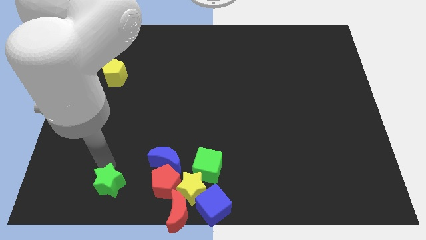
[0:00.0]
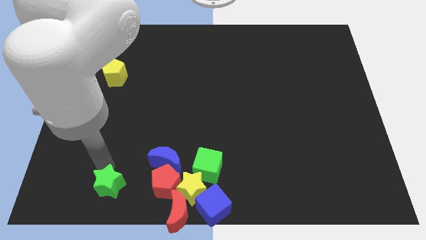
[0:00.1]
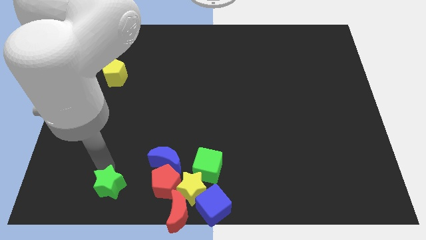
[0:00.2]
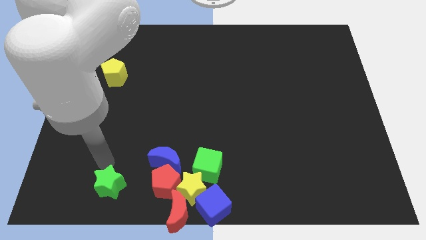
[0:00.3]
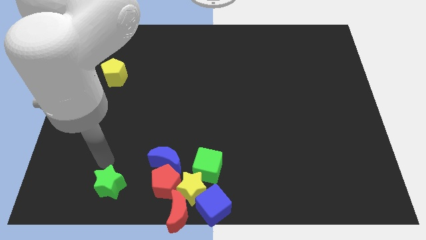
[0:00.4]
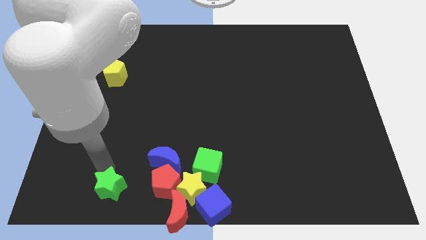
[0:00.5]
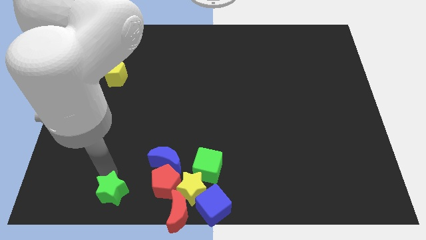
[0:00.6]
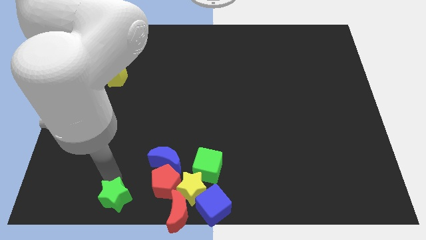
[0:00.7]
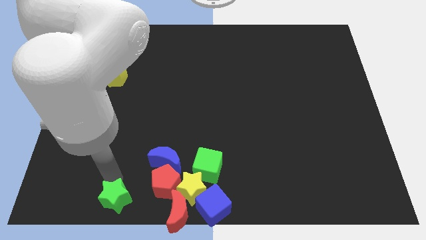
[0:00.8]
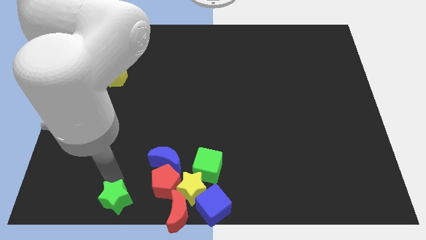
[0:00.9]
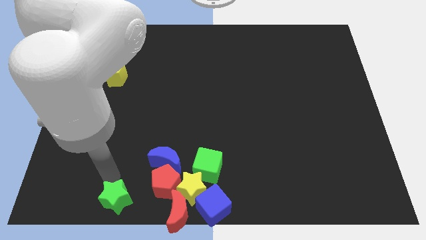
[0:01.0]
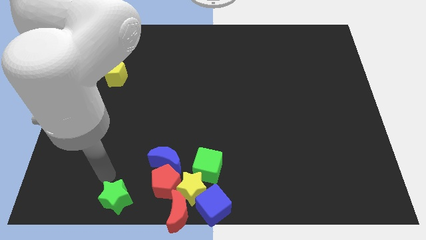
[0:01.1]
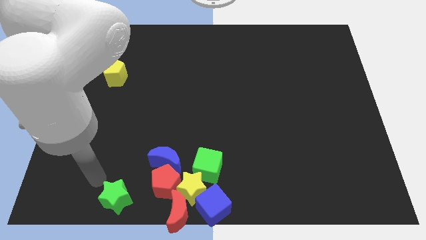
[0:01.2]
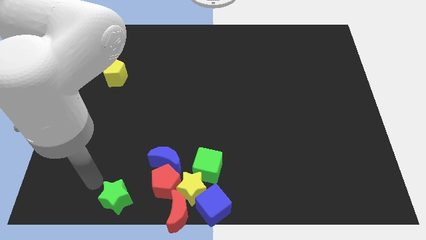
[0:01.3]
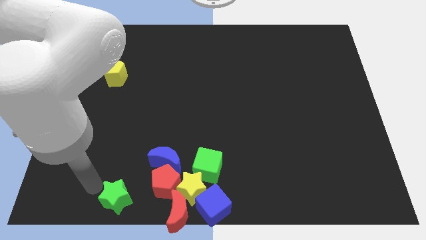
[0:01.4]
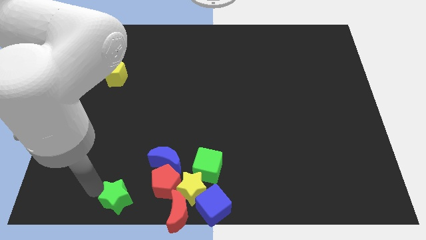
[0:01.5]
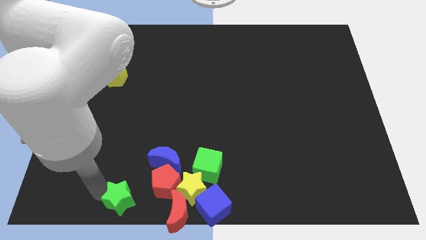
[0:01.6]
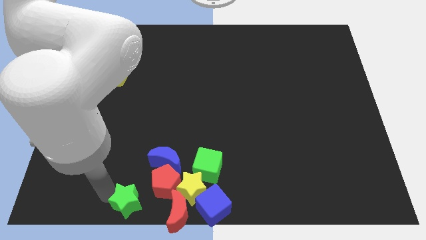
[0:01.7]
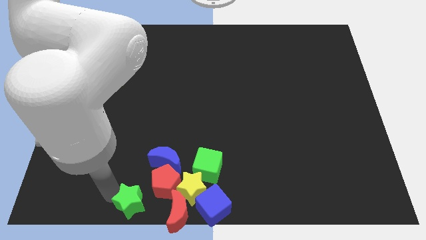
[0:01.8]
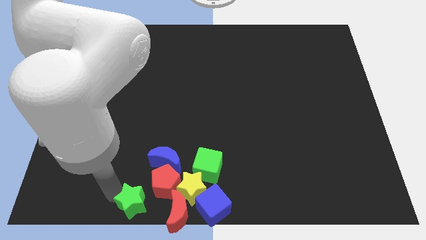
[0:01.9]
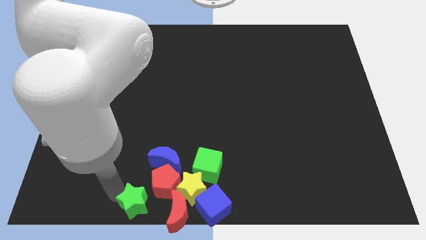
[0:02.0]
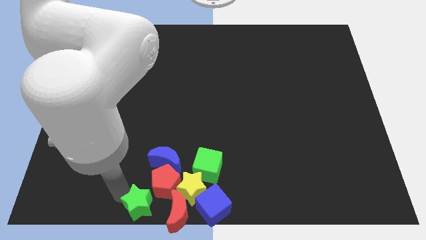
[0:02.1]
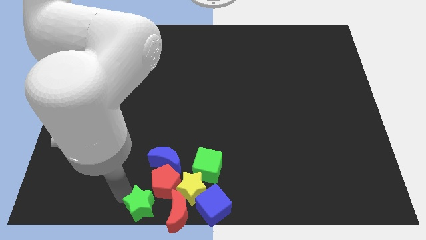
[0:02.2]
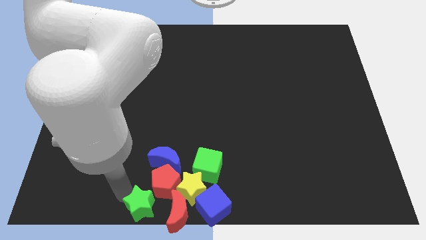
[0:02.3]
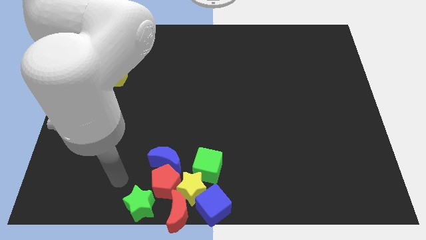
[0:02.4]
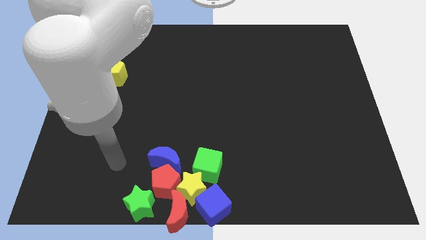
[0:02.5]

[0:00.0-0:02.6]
move the green star diagonally left to the red pentagon

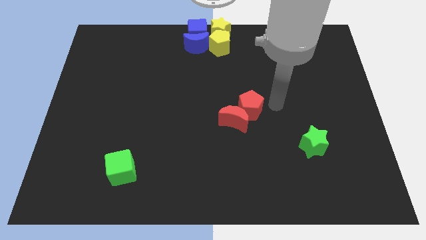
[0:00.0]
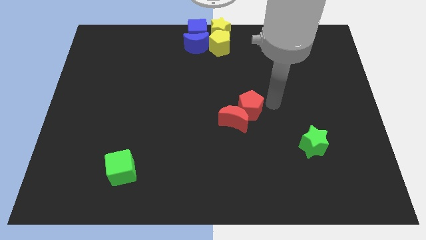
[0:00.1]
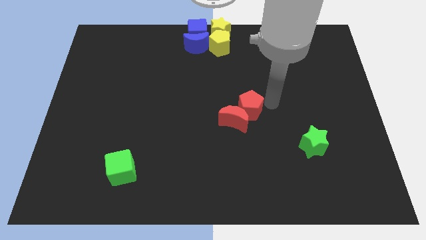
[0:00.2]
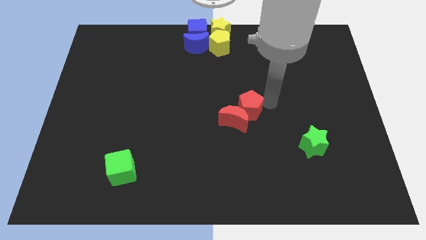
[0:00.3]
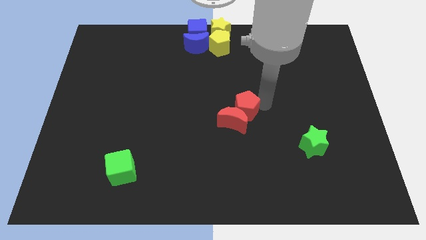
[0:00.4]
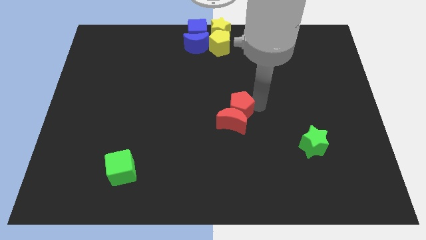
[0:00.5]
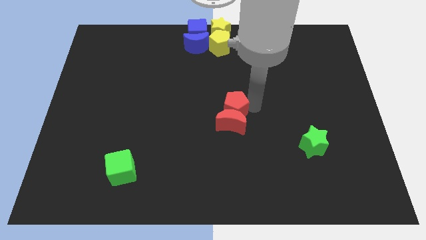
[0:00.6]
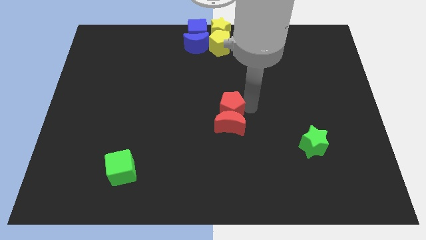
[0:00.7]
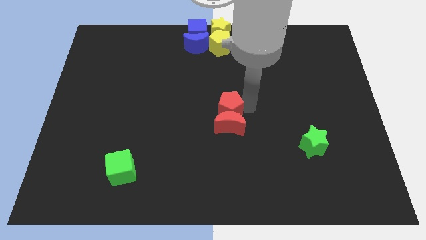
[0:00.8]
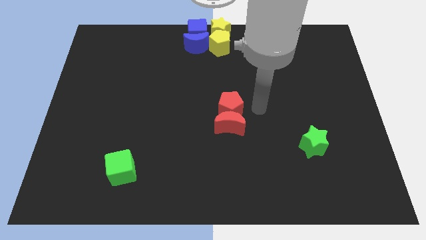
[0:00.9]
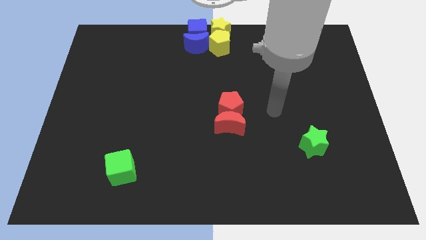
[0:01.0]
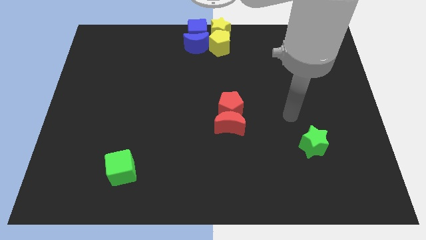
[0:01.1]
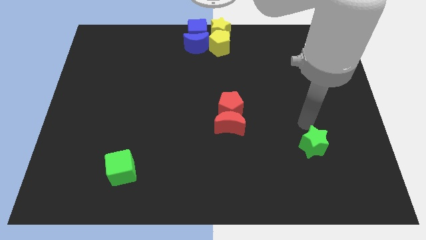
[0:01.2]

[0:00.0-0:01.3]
move the red pentagon to the center of the board

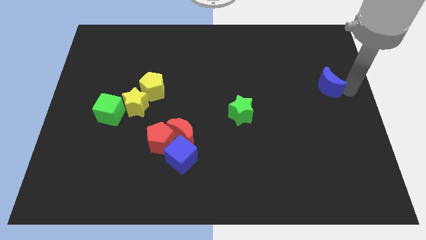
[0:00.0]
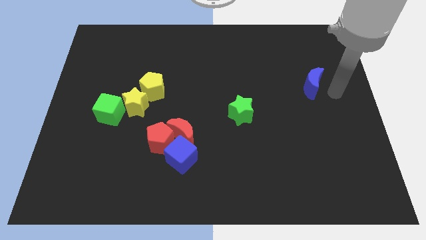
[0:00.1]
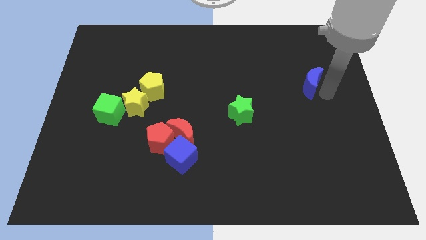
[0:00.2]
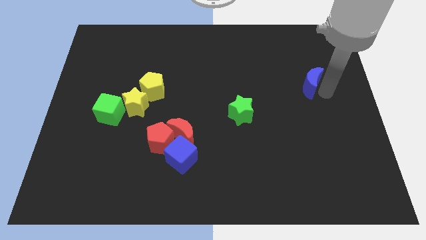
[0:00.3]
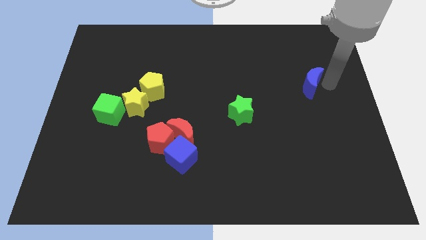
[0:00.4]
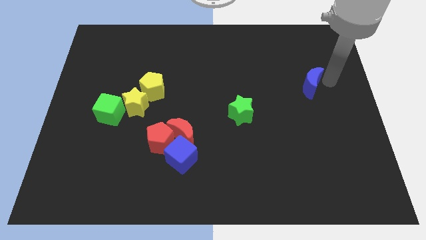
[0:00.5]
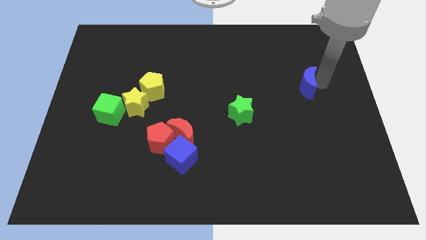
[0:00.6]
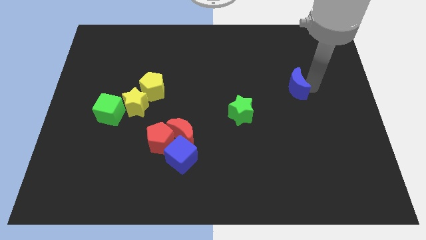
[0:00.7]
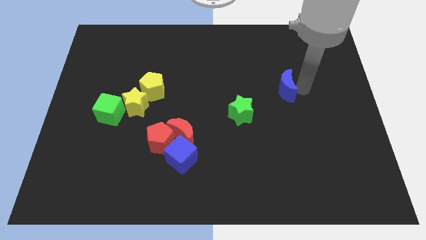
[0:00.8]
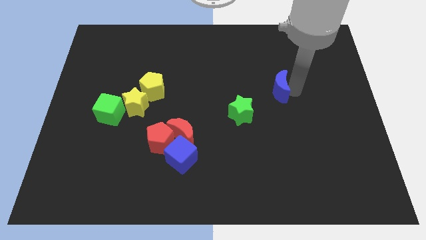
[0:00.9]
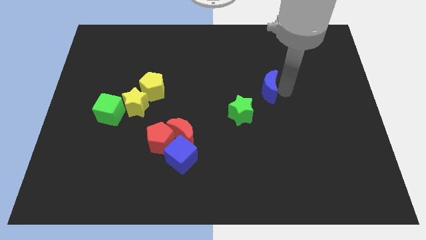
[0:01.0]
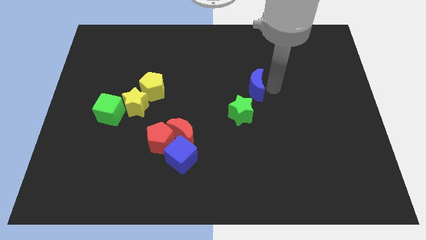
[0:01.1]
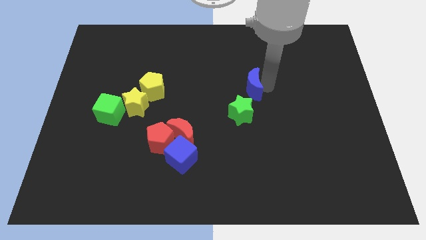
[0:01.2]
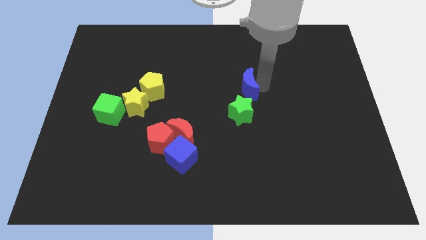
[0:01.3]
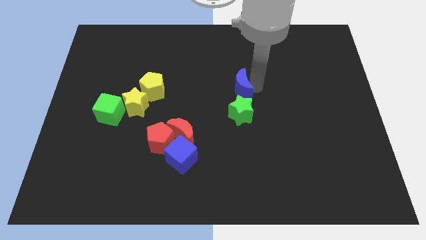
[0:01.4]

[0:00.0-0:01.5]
push the blue crescent to the top of green star

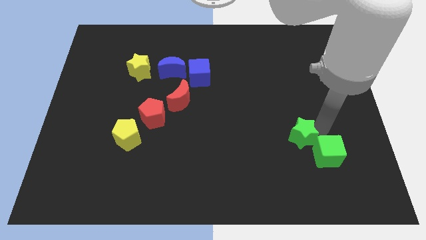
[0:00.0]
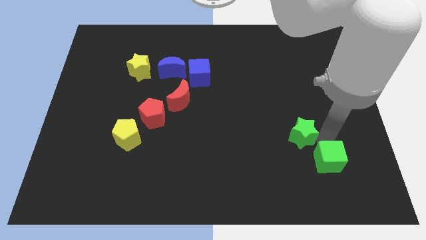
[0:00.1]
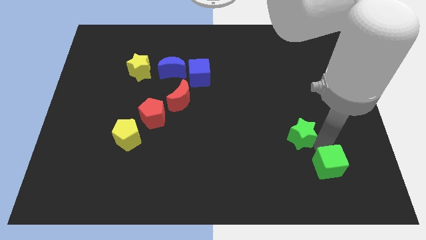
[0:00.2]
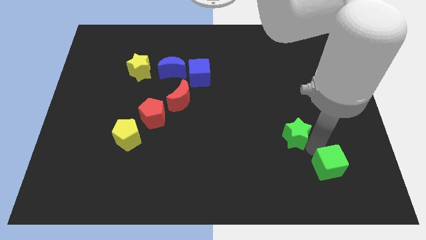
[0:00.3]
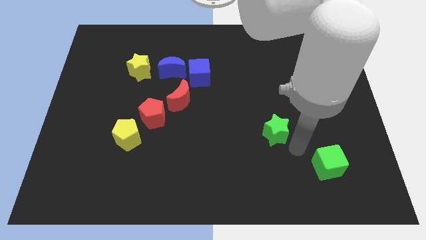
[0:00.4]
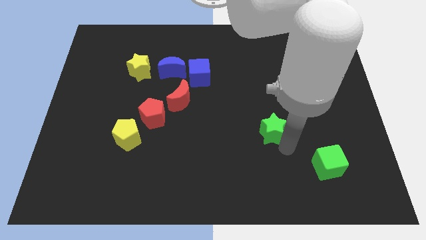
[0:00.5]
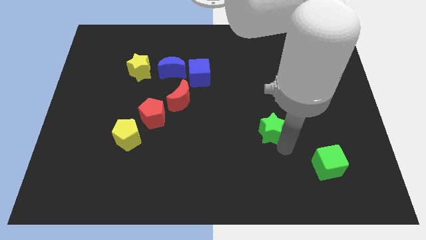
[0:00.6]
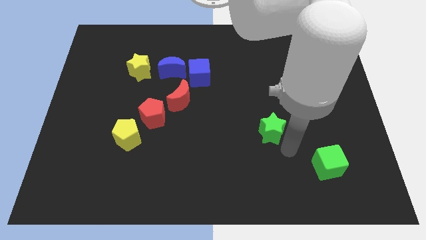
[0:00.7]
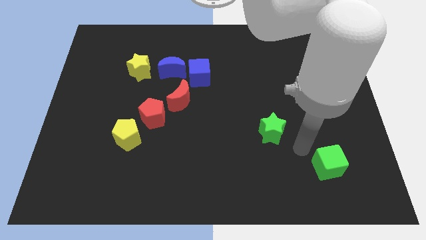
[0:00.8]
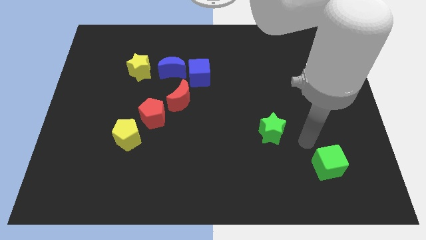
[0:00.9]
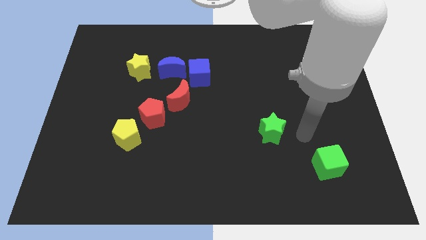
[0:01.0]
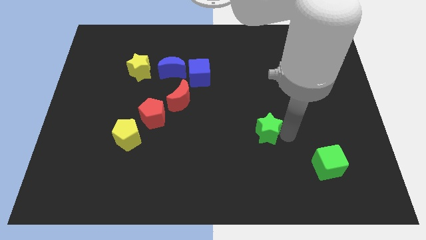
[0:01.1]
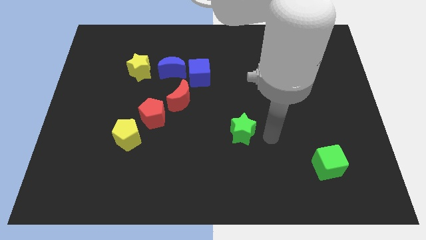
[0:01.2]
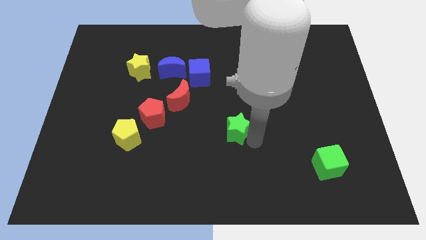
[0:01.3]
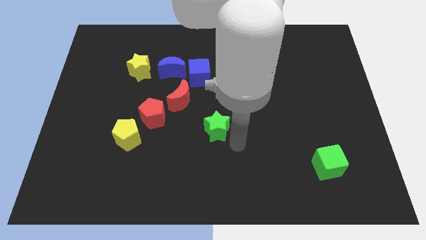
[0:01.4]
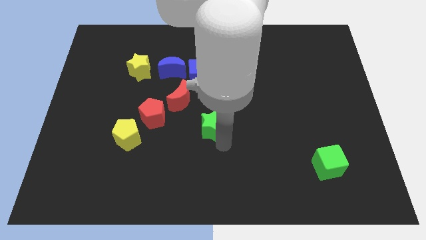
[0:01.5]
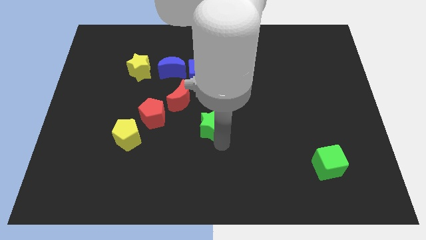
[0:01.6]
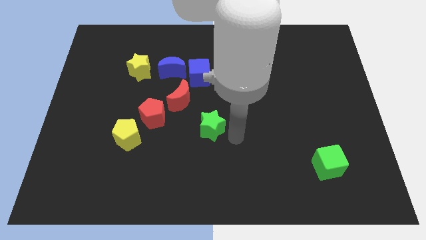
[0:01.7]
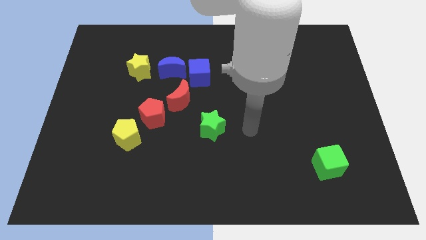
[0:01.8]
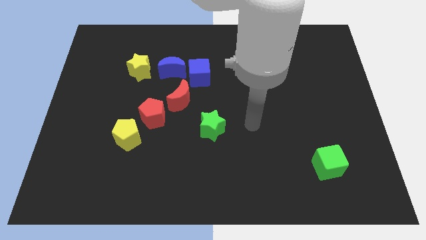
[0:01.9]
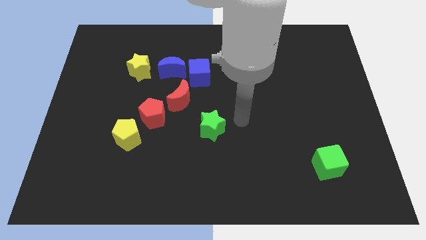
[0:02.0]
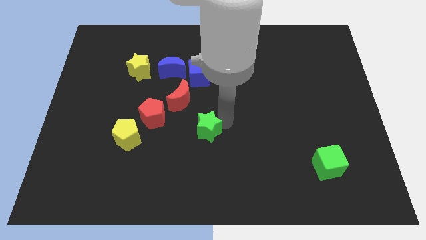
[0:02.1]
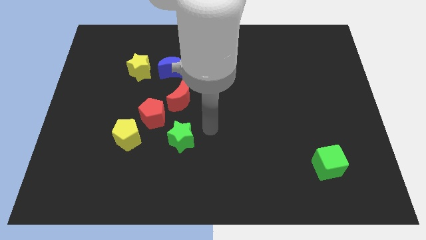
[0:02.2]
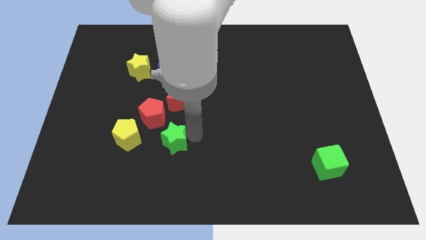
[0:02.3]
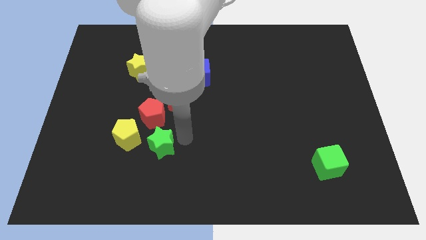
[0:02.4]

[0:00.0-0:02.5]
separate green star from green cube

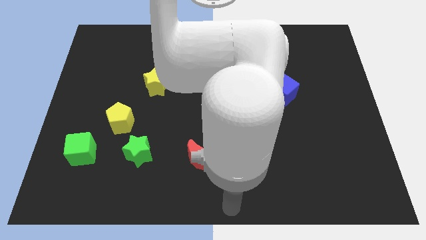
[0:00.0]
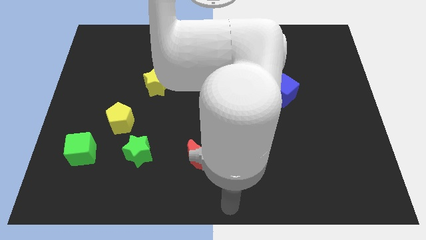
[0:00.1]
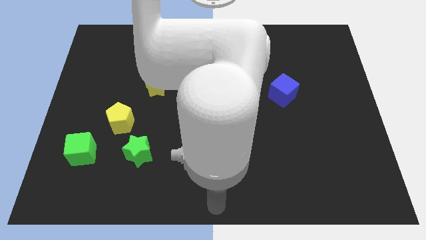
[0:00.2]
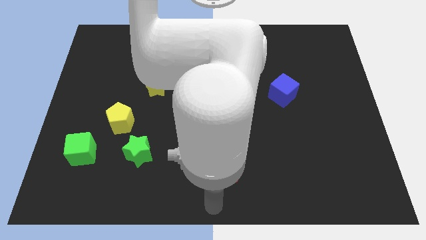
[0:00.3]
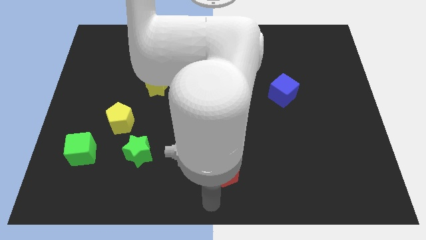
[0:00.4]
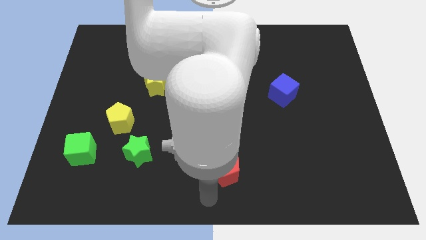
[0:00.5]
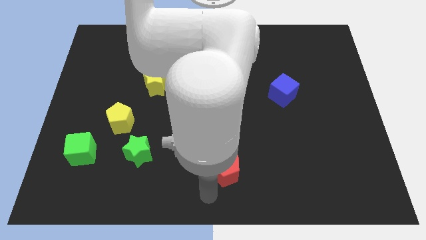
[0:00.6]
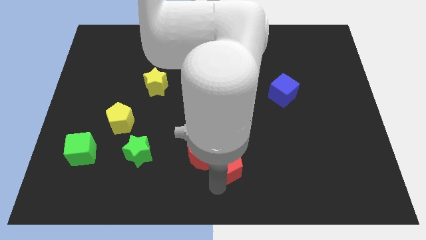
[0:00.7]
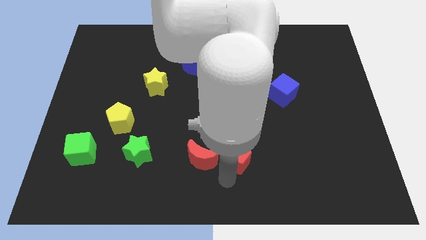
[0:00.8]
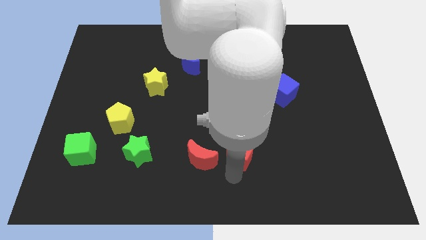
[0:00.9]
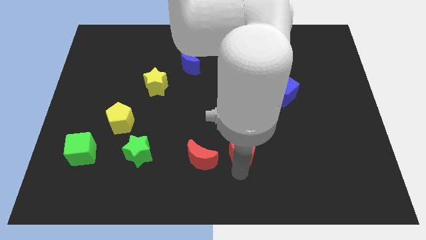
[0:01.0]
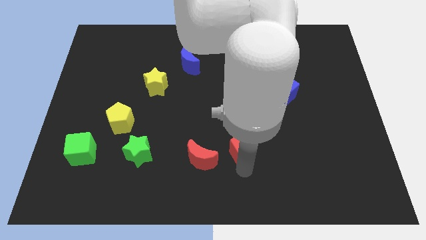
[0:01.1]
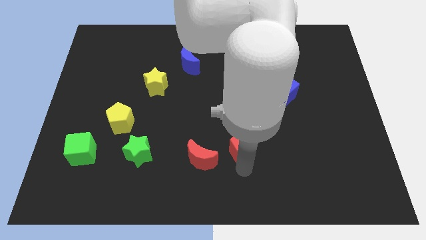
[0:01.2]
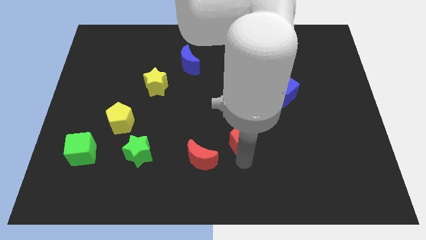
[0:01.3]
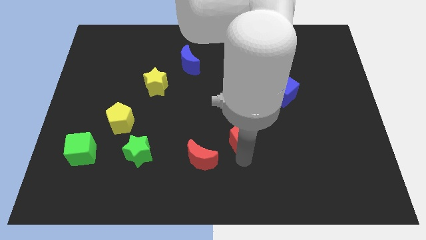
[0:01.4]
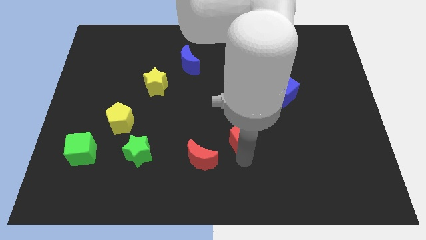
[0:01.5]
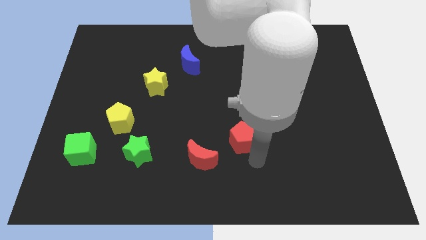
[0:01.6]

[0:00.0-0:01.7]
move the red pentagon to the top right side of the red crescent
